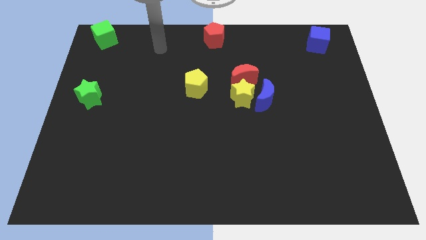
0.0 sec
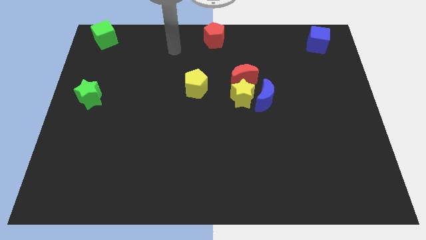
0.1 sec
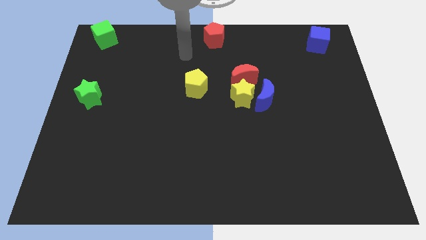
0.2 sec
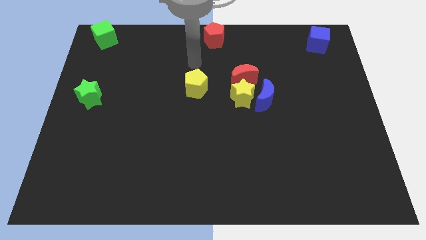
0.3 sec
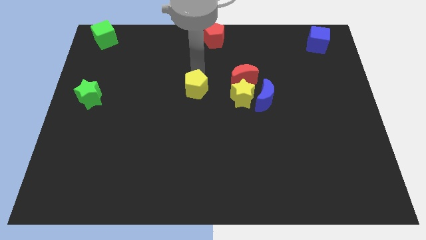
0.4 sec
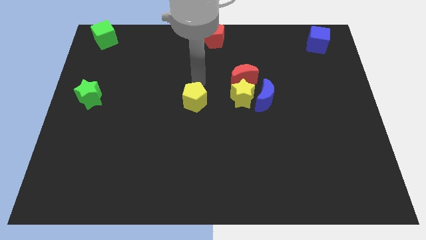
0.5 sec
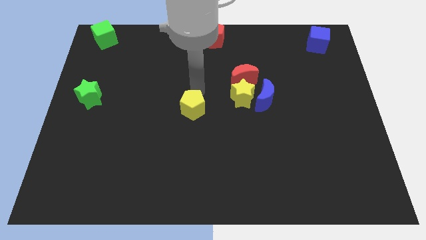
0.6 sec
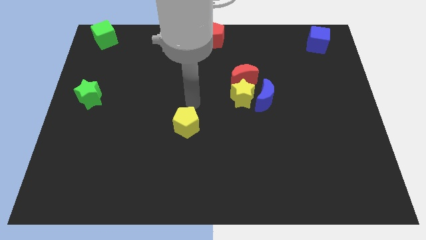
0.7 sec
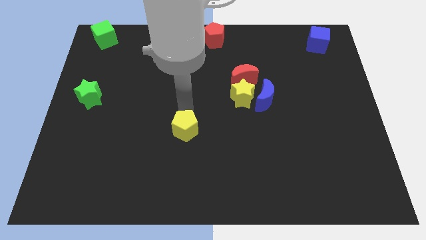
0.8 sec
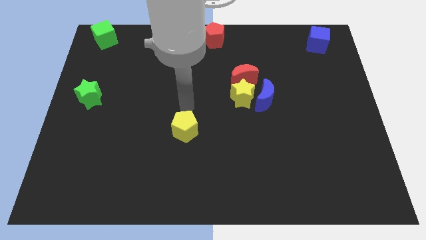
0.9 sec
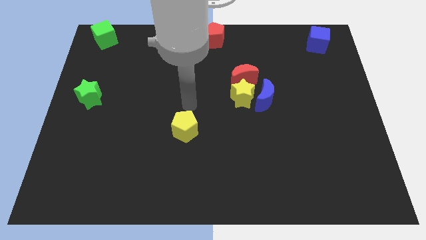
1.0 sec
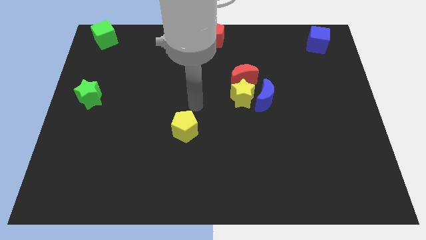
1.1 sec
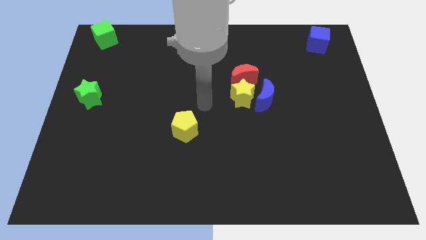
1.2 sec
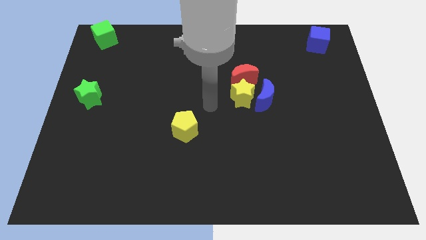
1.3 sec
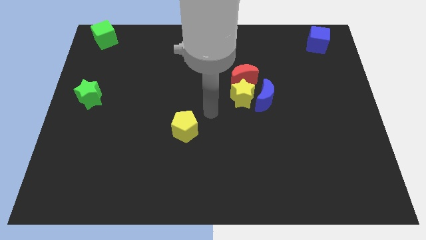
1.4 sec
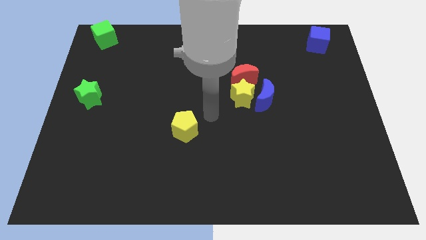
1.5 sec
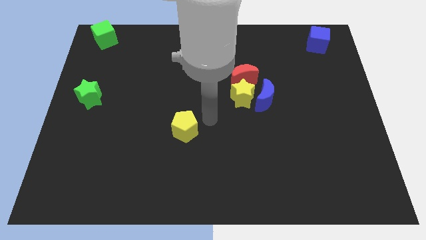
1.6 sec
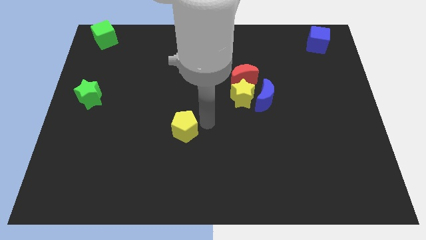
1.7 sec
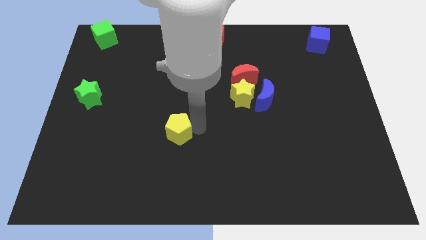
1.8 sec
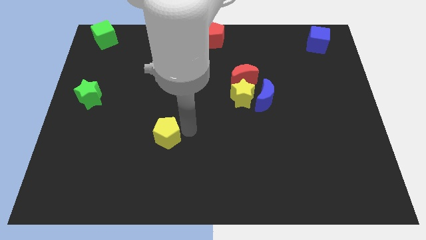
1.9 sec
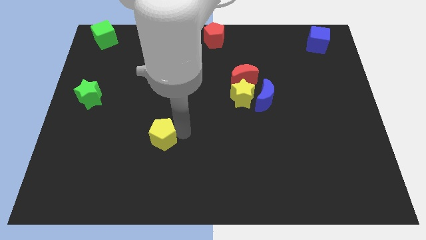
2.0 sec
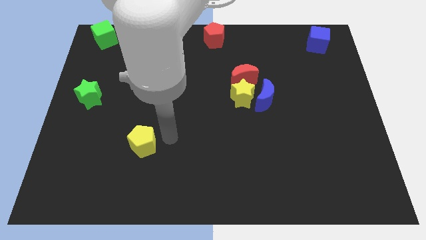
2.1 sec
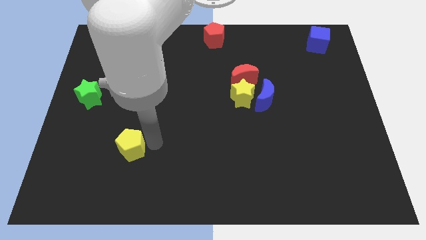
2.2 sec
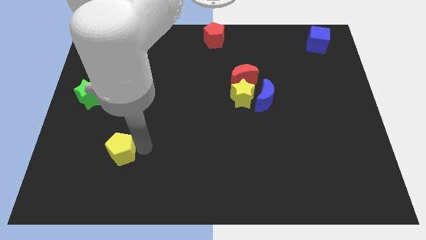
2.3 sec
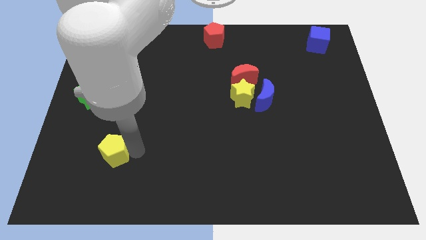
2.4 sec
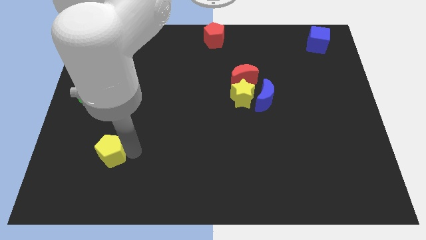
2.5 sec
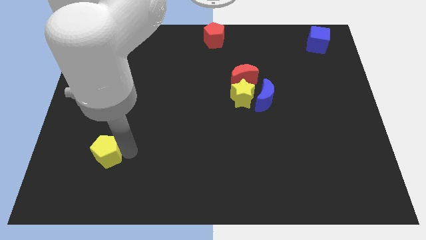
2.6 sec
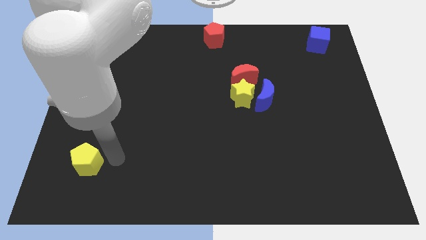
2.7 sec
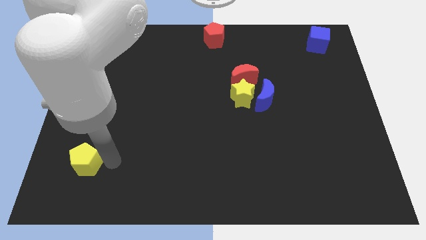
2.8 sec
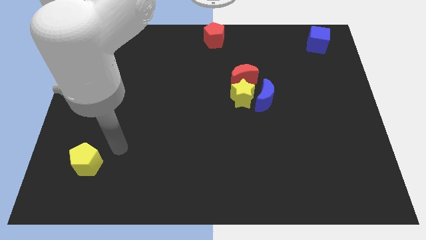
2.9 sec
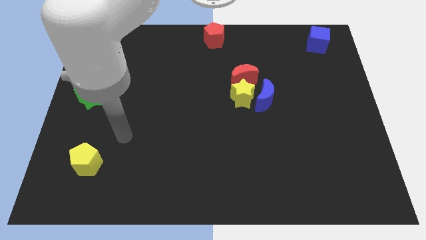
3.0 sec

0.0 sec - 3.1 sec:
place yellow pentagon towards the bottom side of the green star

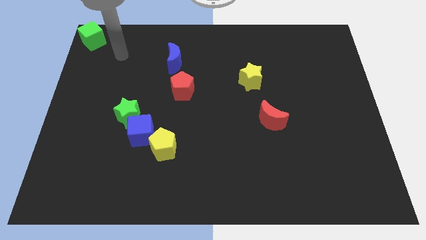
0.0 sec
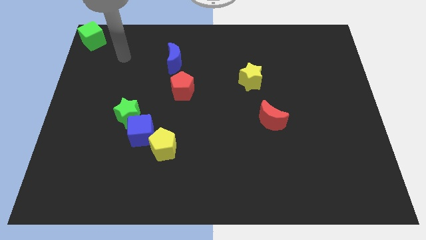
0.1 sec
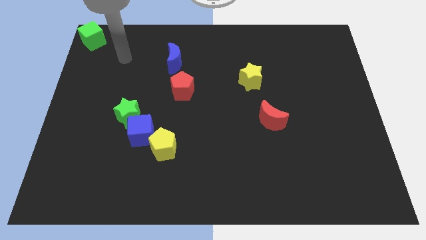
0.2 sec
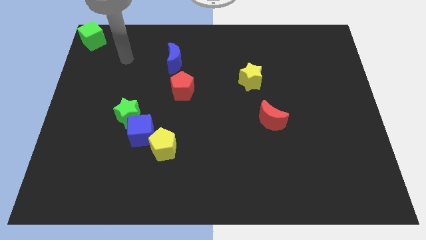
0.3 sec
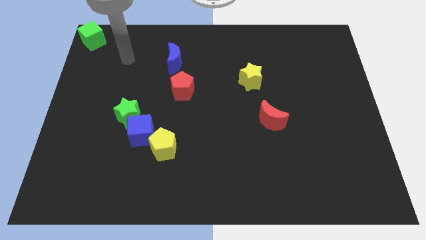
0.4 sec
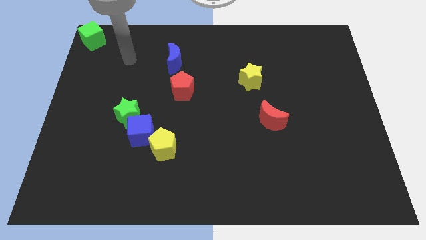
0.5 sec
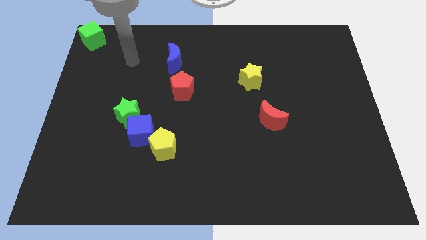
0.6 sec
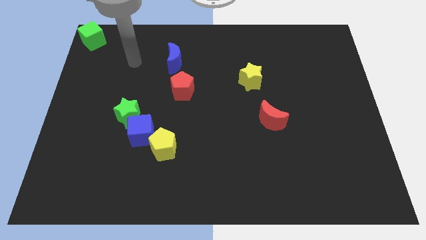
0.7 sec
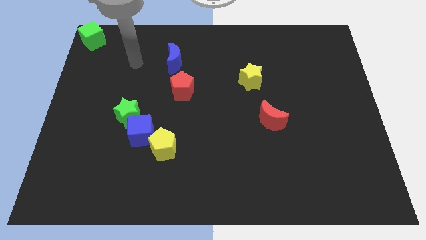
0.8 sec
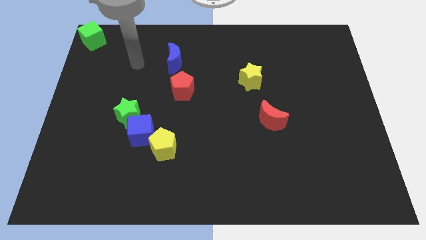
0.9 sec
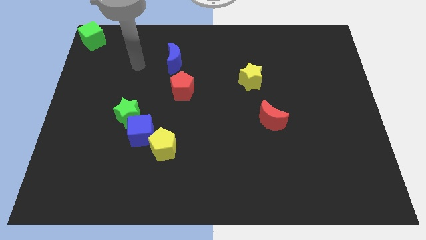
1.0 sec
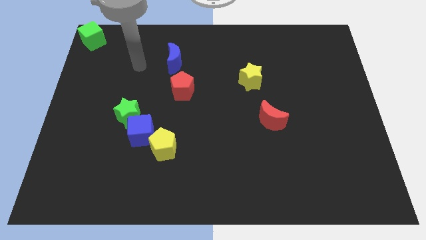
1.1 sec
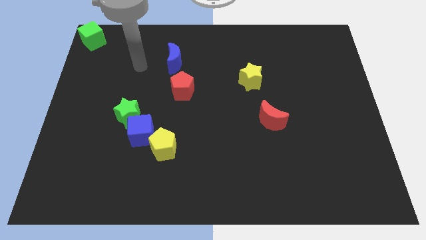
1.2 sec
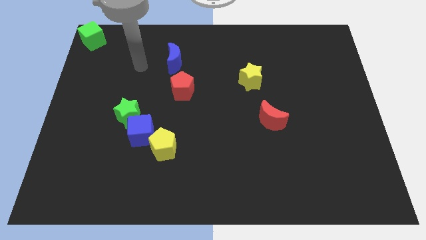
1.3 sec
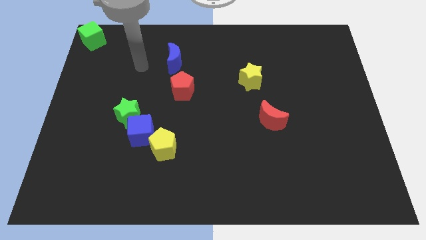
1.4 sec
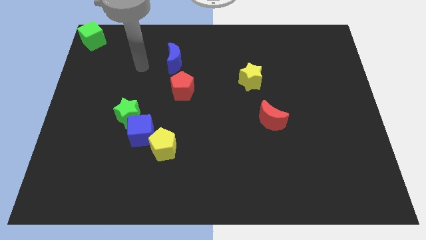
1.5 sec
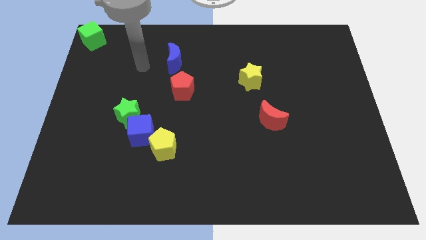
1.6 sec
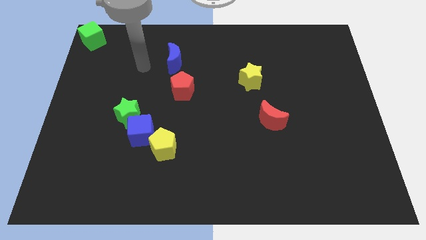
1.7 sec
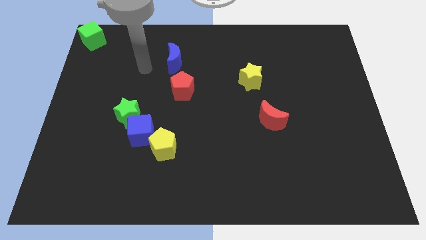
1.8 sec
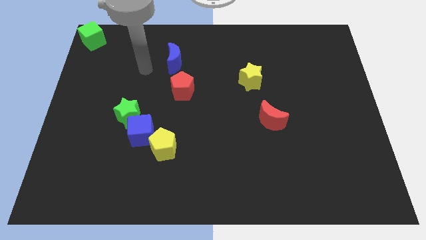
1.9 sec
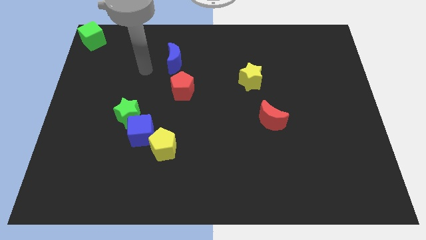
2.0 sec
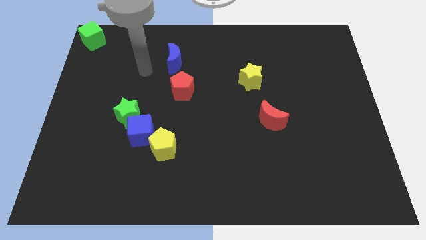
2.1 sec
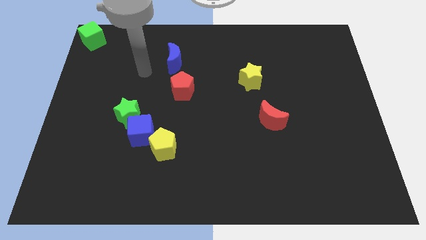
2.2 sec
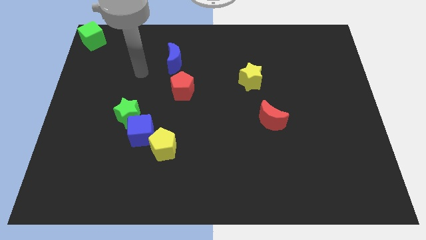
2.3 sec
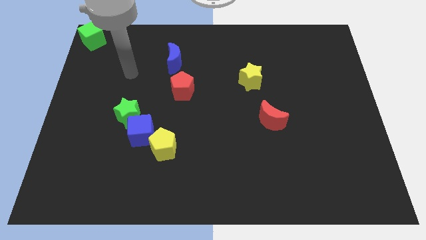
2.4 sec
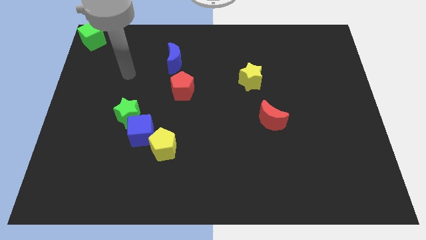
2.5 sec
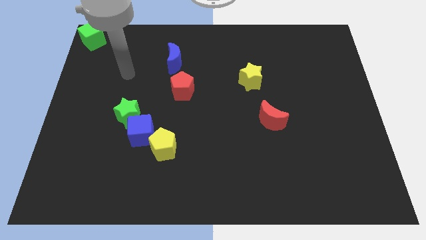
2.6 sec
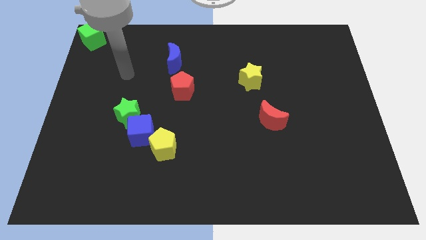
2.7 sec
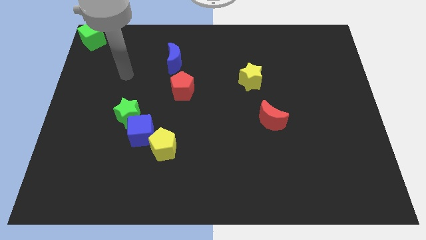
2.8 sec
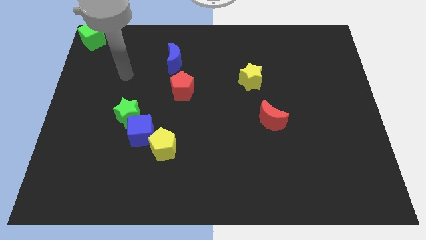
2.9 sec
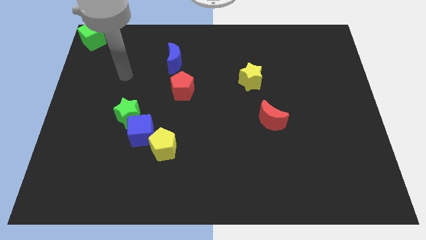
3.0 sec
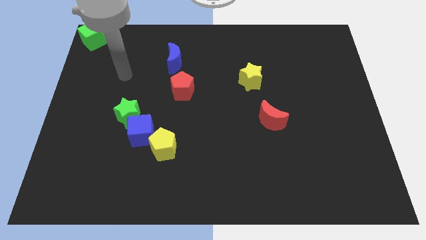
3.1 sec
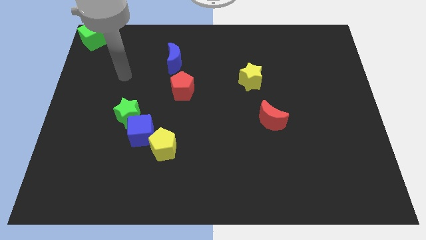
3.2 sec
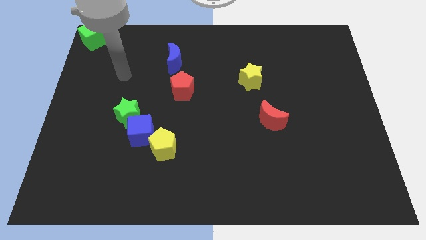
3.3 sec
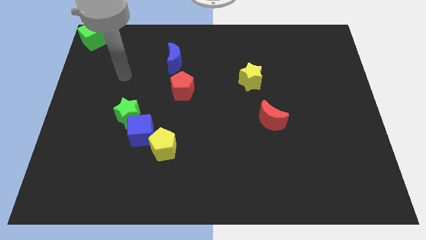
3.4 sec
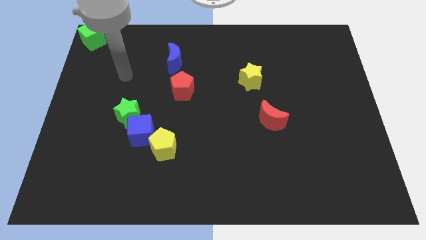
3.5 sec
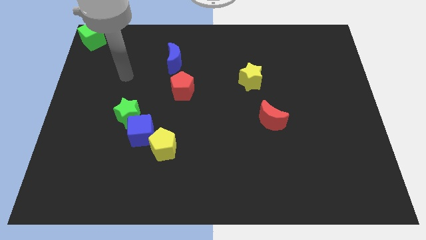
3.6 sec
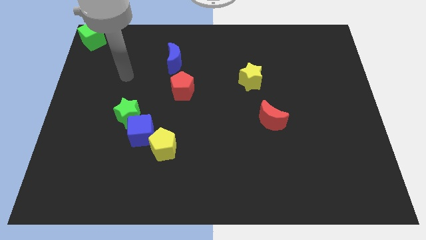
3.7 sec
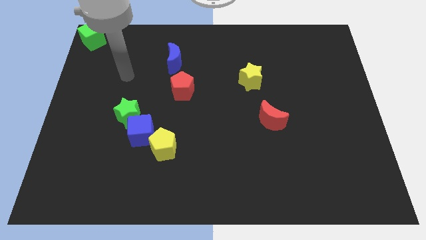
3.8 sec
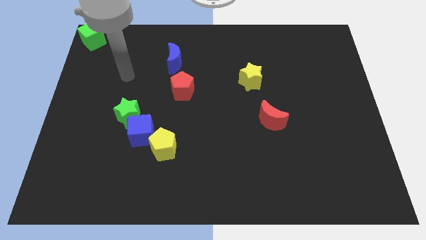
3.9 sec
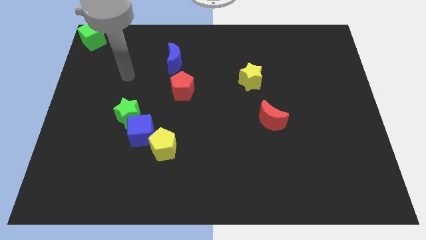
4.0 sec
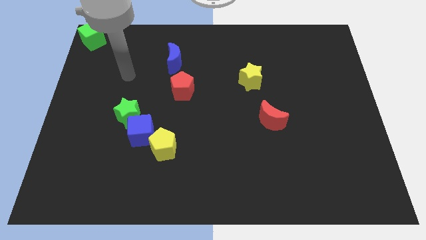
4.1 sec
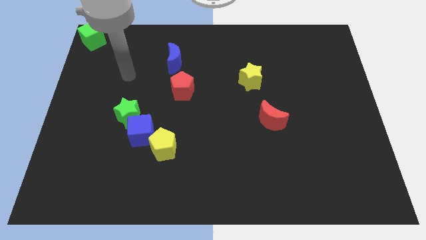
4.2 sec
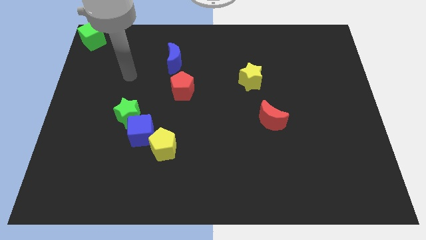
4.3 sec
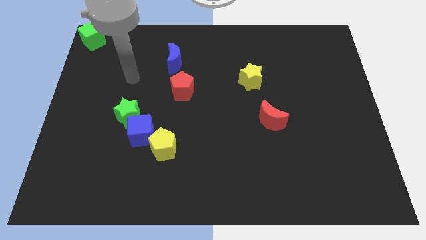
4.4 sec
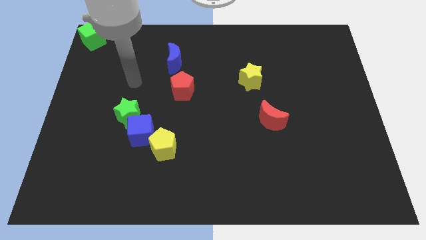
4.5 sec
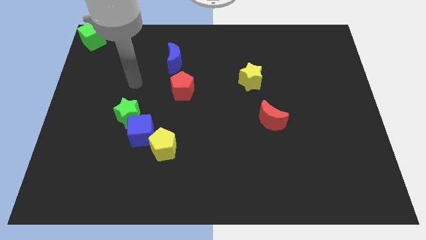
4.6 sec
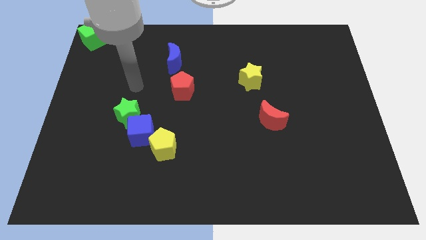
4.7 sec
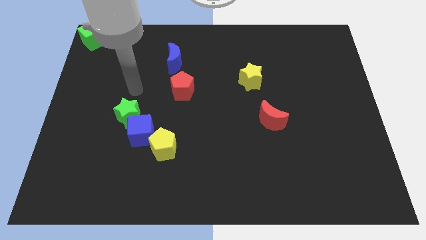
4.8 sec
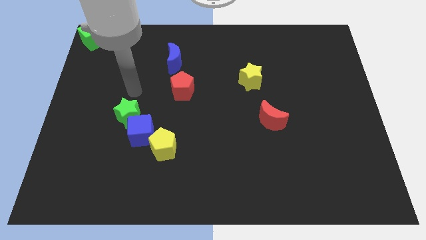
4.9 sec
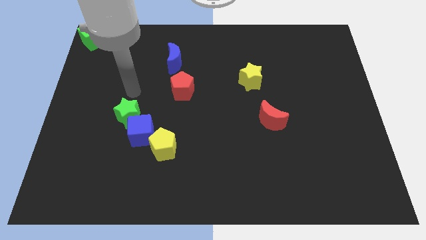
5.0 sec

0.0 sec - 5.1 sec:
point your arm above the green star

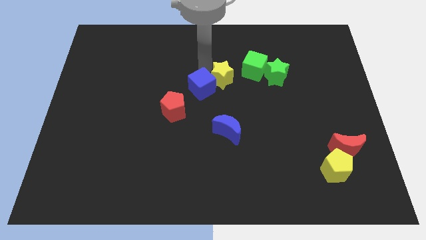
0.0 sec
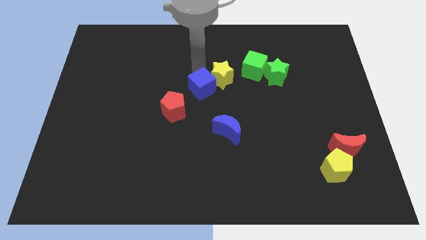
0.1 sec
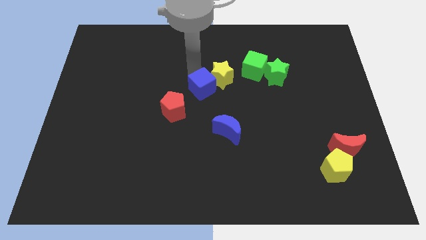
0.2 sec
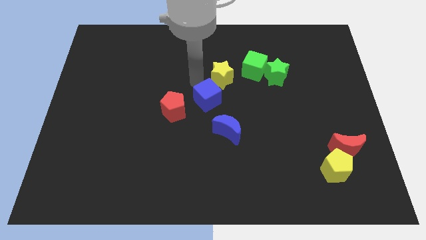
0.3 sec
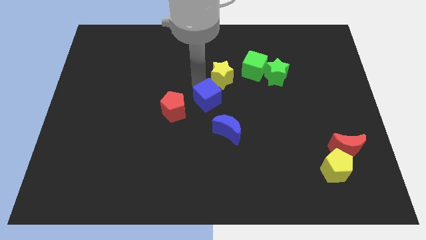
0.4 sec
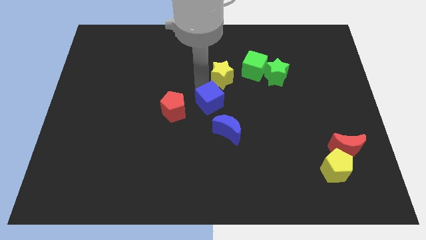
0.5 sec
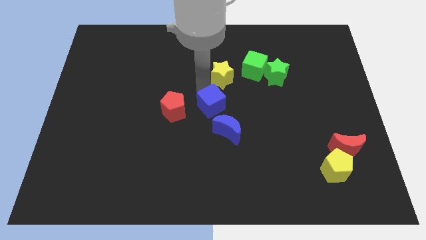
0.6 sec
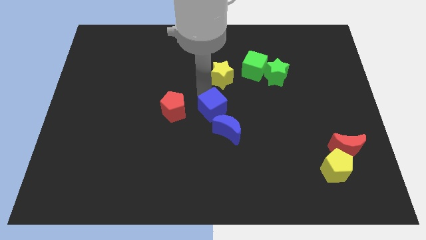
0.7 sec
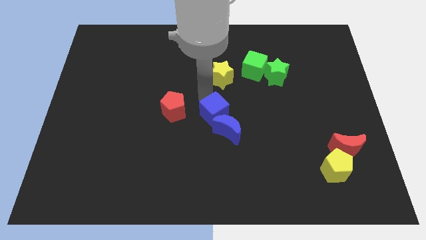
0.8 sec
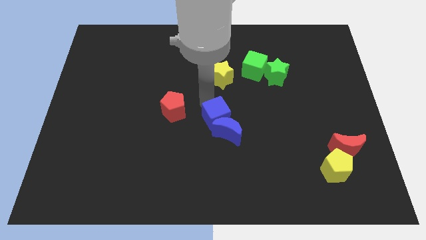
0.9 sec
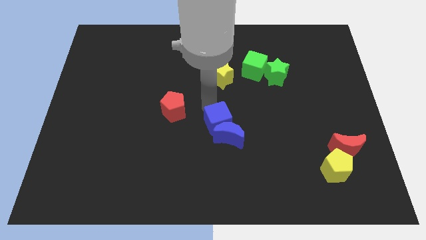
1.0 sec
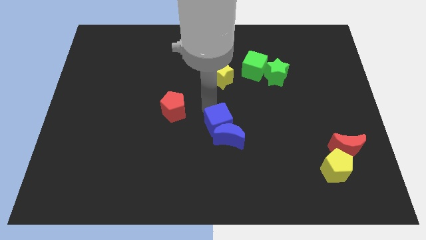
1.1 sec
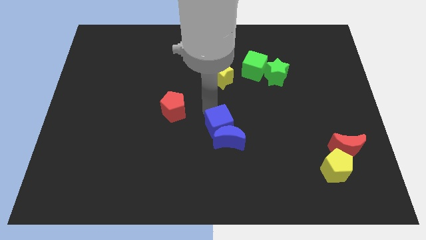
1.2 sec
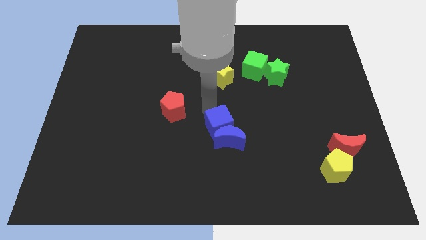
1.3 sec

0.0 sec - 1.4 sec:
slide the blue cube into the blue moon
